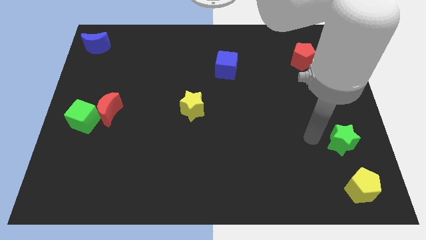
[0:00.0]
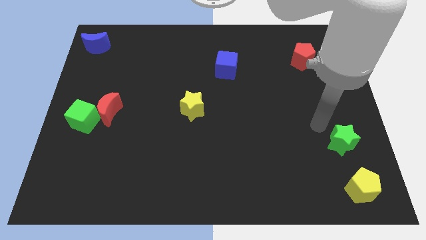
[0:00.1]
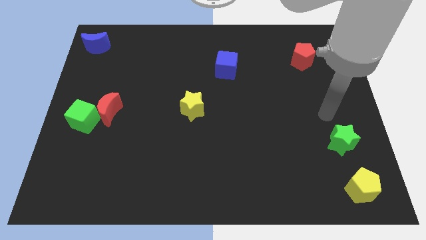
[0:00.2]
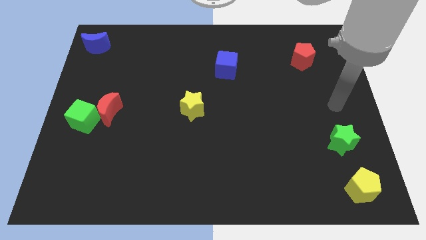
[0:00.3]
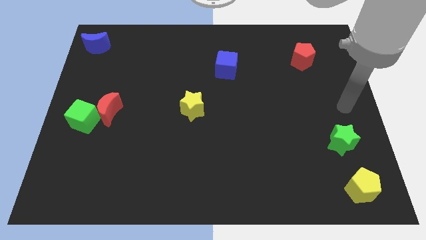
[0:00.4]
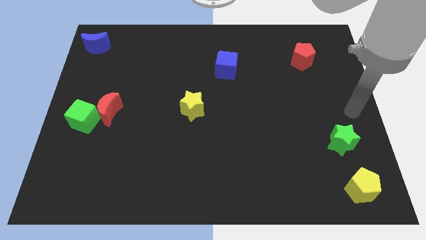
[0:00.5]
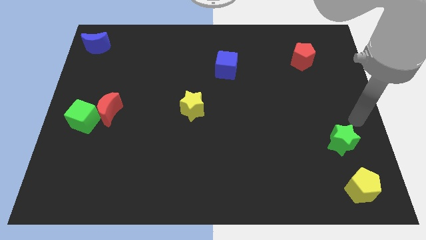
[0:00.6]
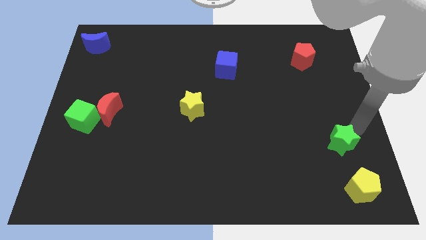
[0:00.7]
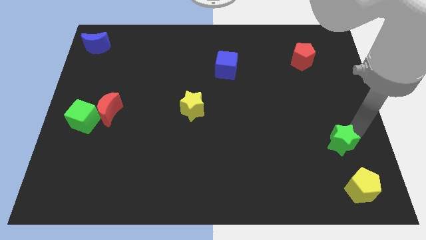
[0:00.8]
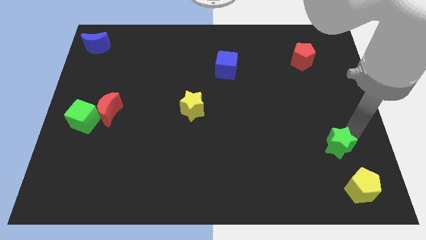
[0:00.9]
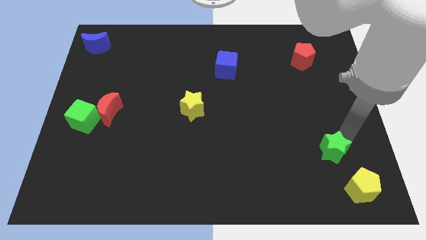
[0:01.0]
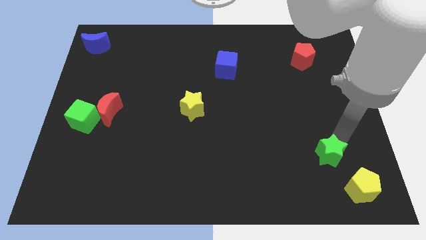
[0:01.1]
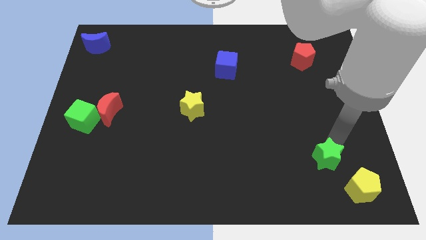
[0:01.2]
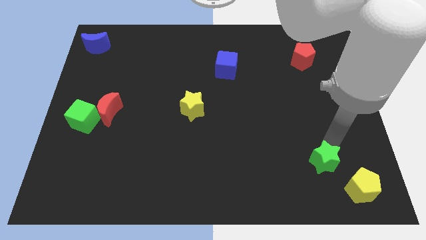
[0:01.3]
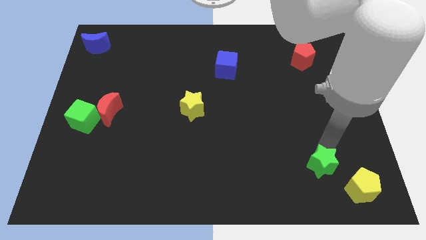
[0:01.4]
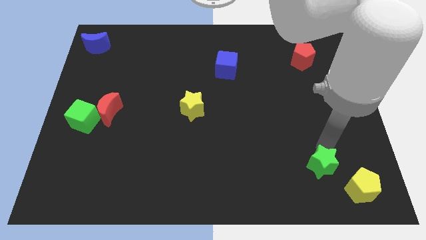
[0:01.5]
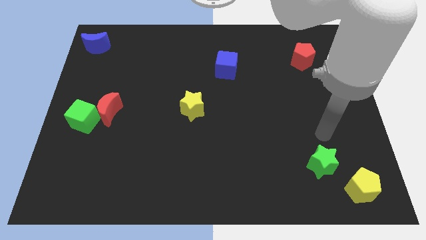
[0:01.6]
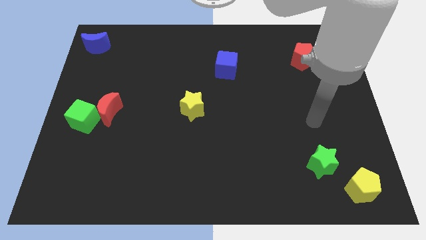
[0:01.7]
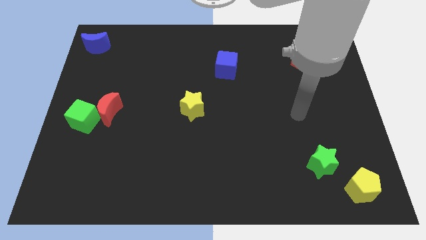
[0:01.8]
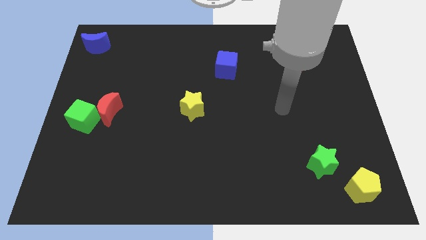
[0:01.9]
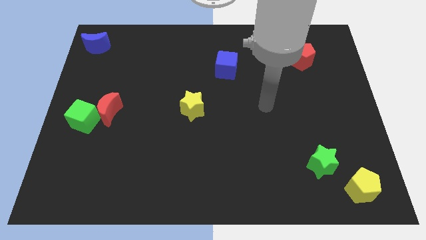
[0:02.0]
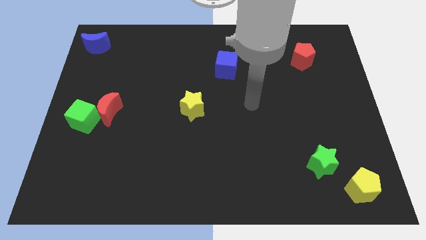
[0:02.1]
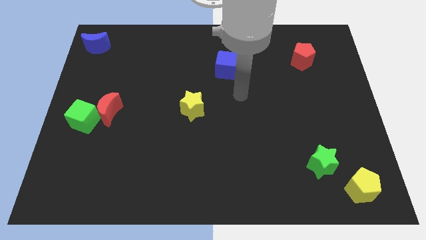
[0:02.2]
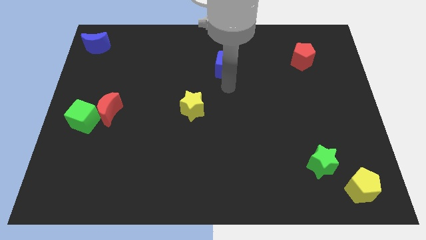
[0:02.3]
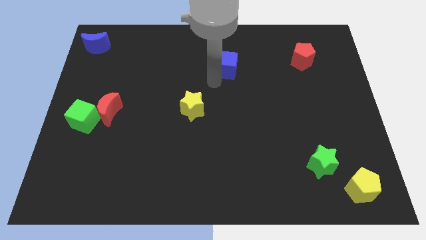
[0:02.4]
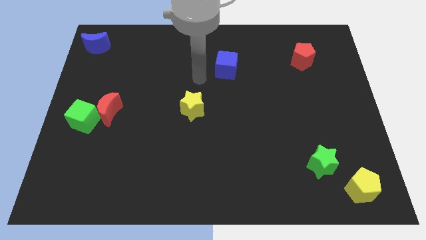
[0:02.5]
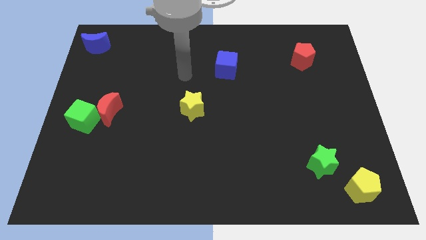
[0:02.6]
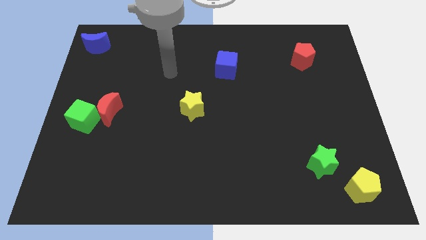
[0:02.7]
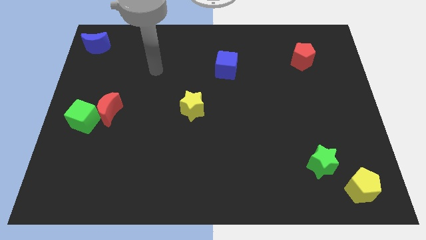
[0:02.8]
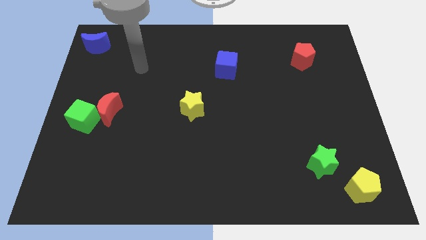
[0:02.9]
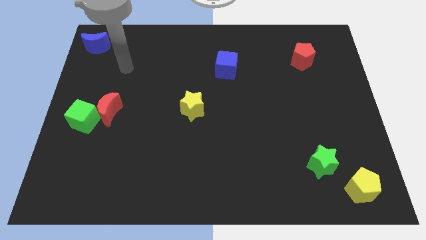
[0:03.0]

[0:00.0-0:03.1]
slide green star to the top left of yellow pentagon

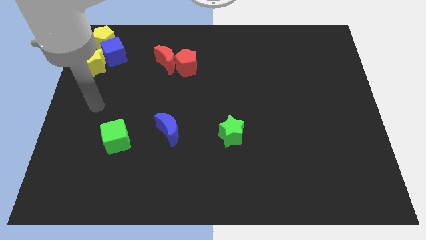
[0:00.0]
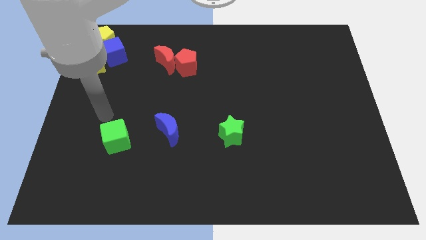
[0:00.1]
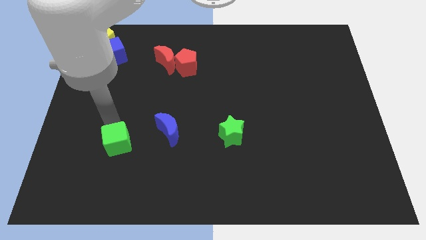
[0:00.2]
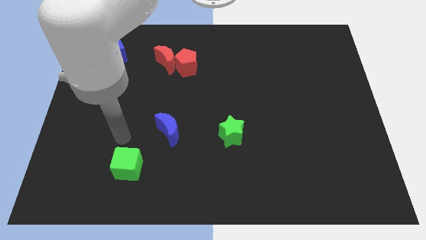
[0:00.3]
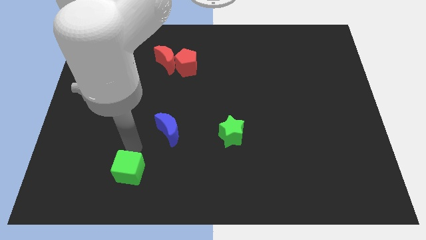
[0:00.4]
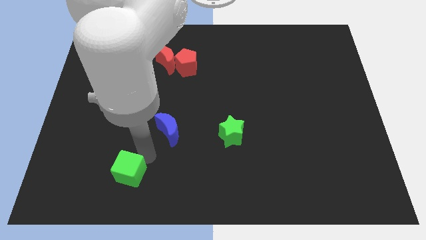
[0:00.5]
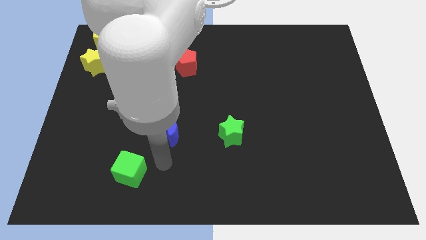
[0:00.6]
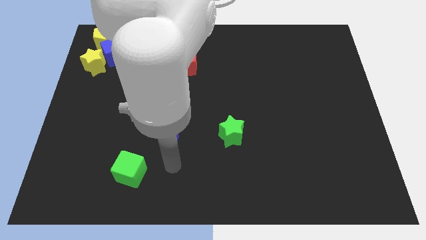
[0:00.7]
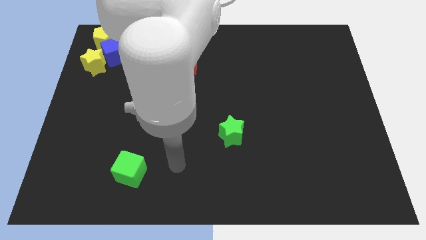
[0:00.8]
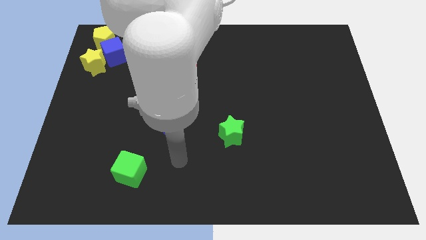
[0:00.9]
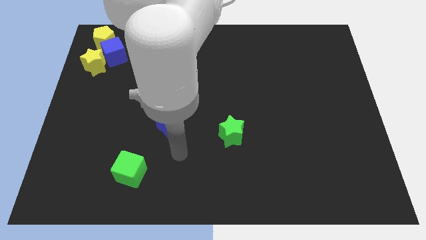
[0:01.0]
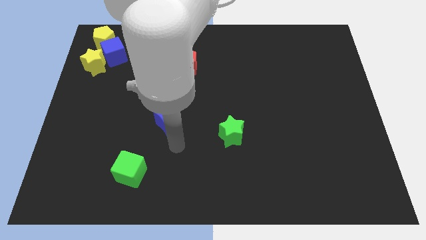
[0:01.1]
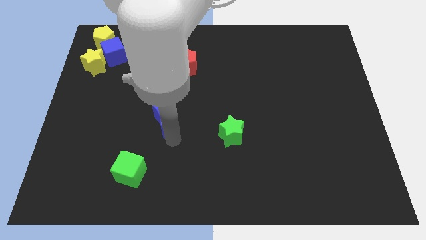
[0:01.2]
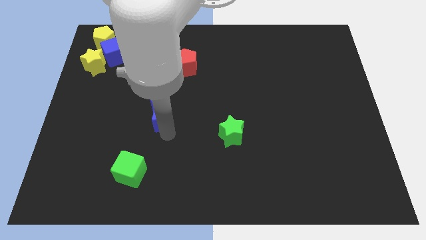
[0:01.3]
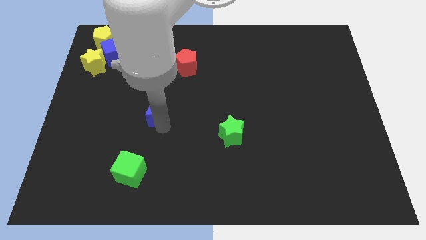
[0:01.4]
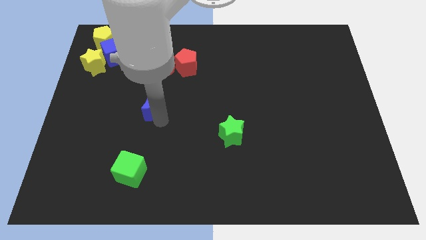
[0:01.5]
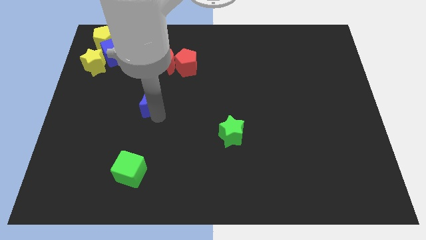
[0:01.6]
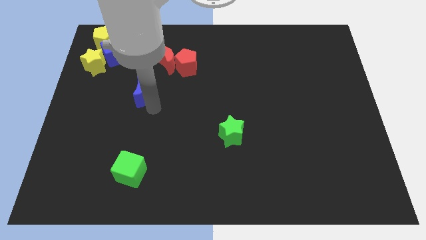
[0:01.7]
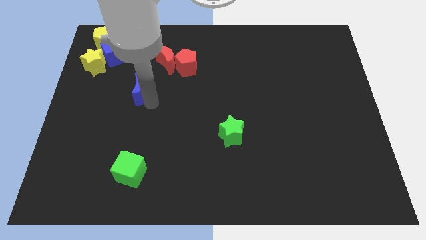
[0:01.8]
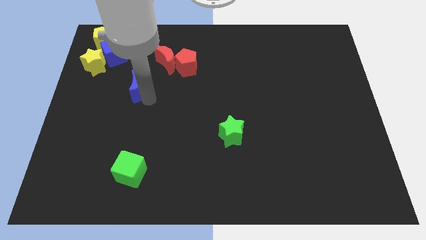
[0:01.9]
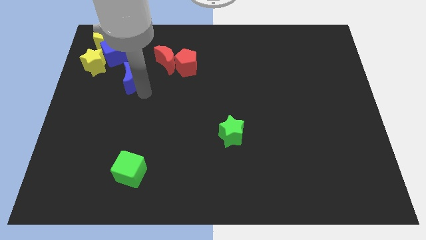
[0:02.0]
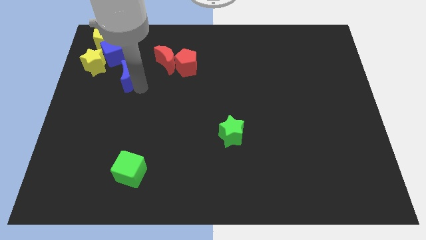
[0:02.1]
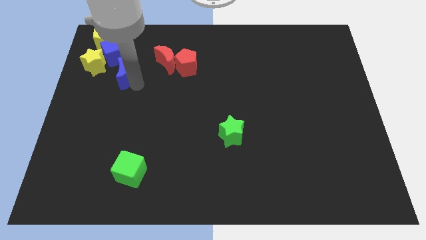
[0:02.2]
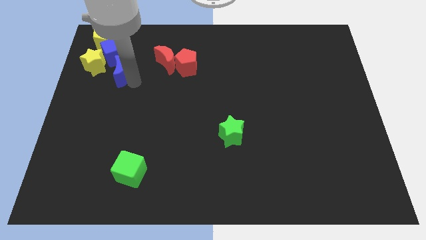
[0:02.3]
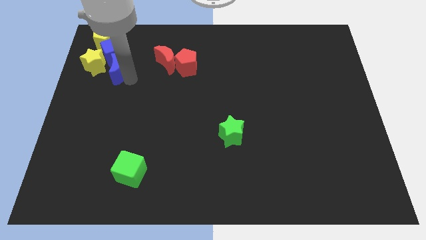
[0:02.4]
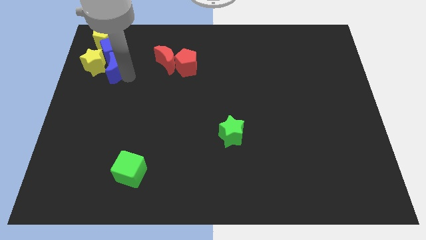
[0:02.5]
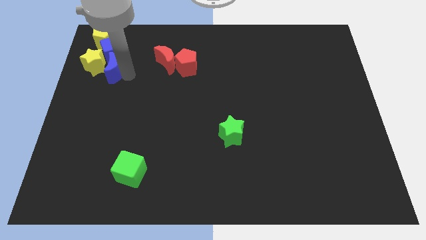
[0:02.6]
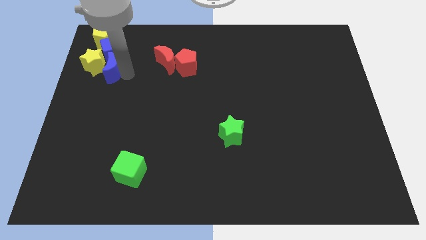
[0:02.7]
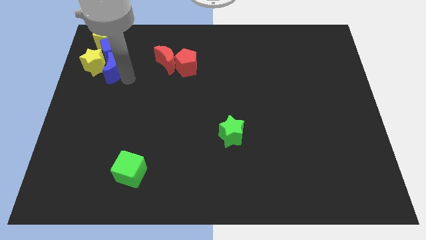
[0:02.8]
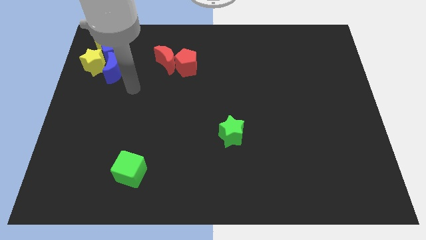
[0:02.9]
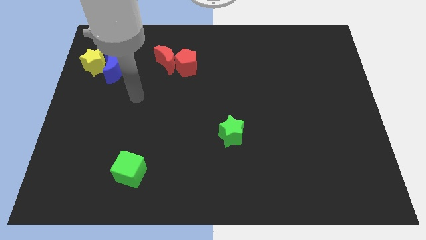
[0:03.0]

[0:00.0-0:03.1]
push the blue crescent to the bottom of the blue cube

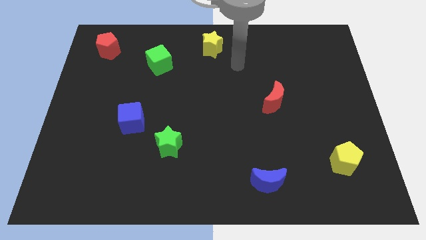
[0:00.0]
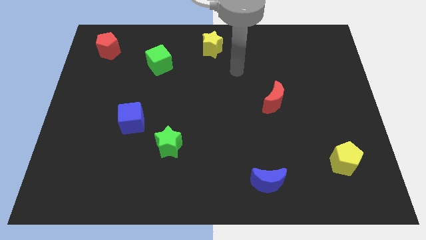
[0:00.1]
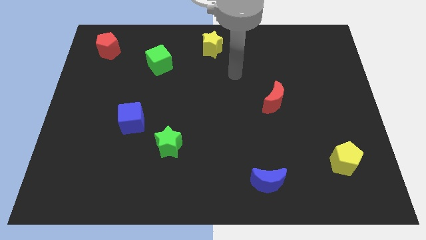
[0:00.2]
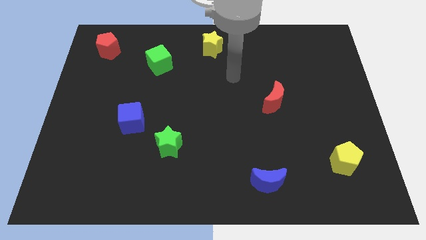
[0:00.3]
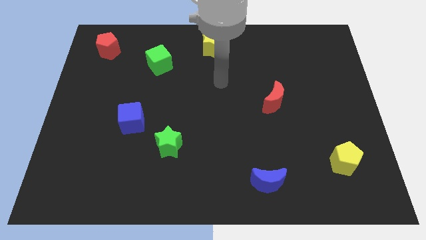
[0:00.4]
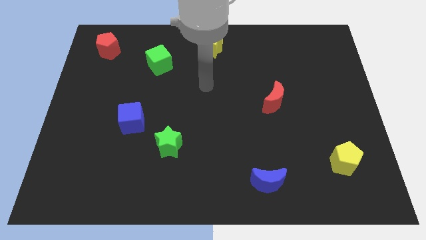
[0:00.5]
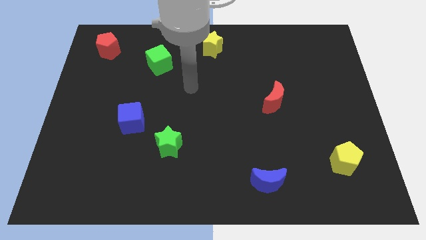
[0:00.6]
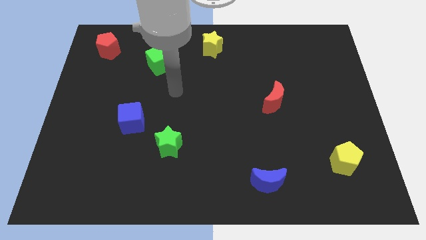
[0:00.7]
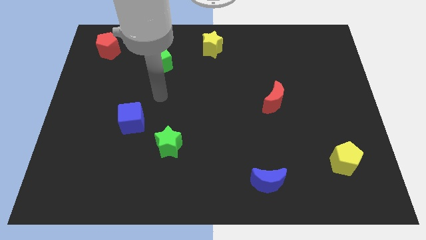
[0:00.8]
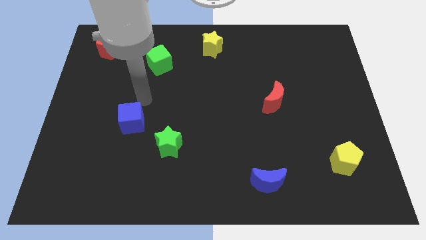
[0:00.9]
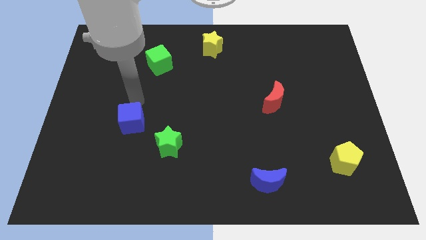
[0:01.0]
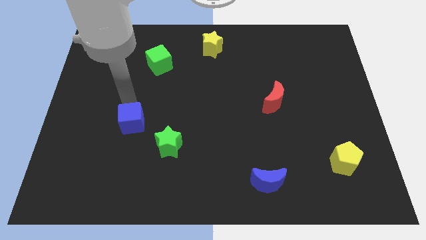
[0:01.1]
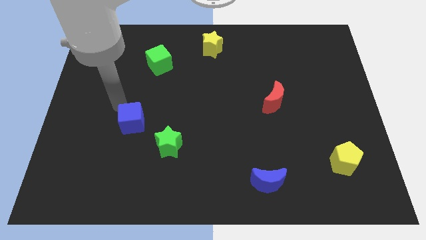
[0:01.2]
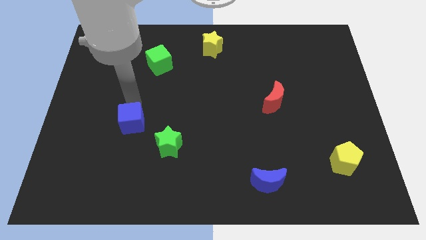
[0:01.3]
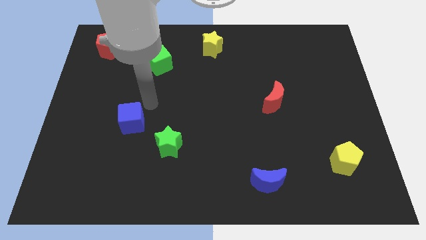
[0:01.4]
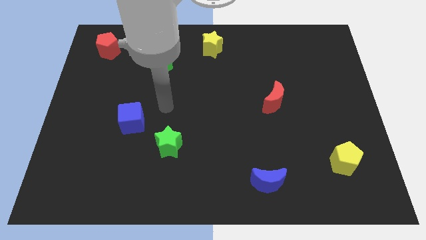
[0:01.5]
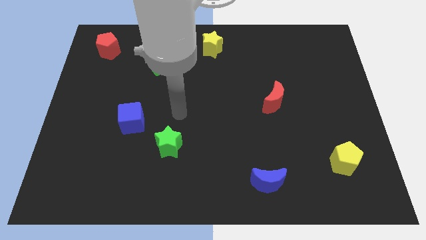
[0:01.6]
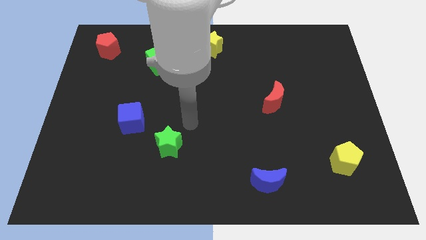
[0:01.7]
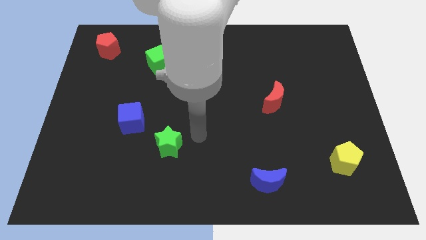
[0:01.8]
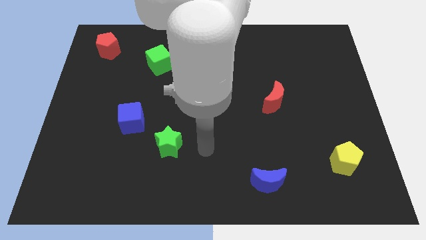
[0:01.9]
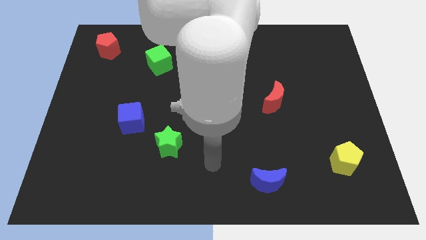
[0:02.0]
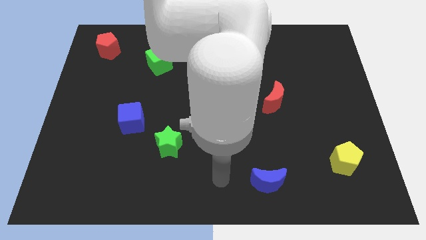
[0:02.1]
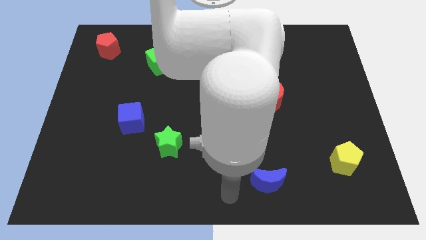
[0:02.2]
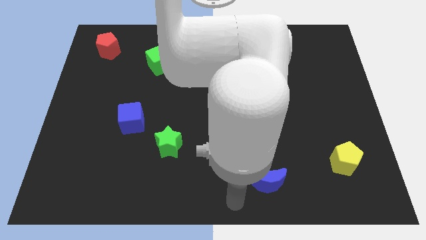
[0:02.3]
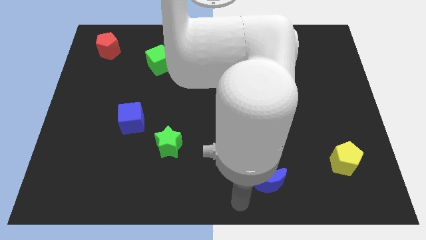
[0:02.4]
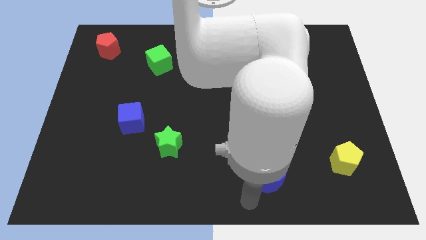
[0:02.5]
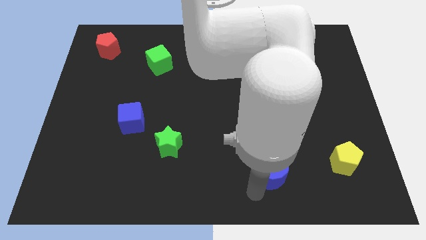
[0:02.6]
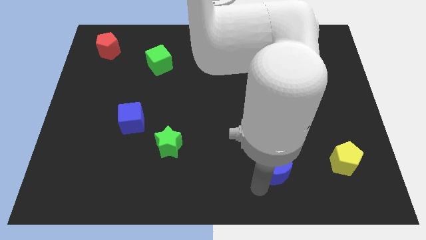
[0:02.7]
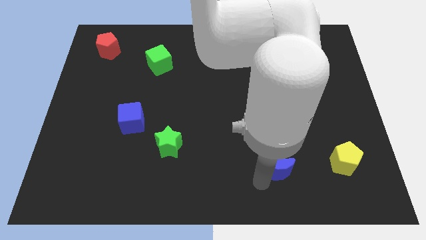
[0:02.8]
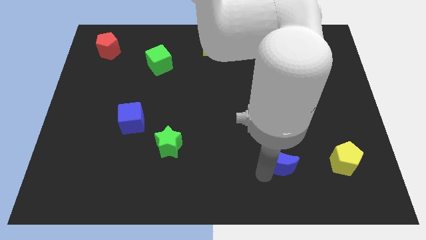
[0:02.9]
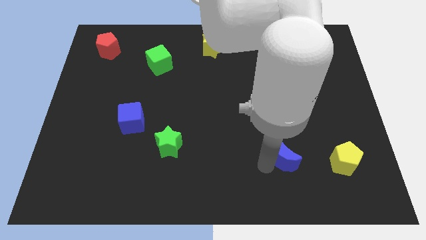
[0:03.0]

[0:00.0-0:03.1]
place blue moon to the left of yellow pentagon
